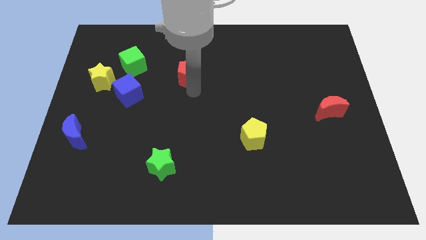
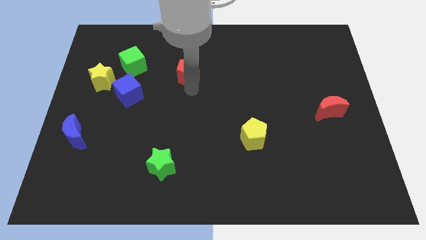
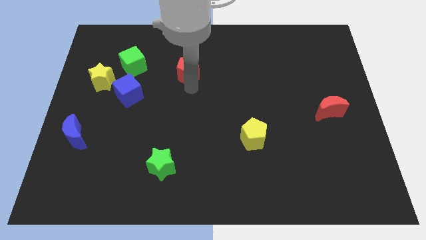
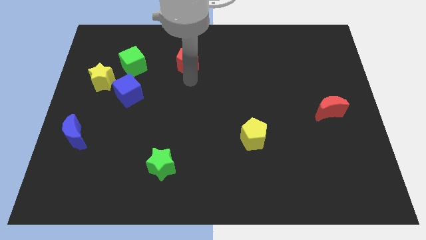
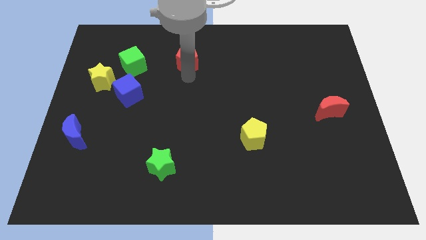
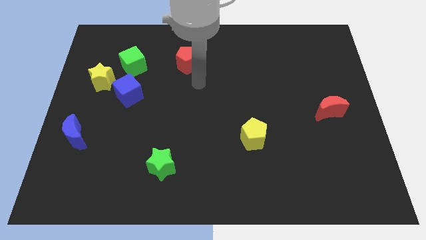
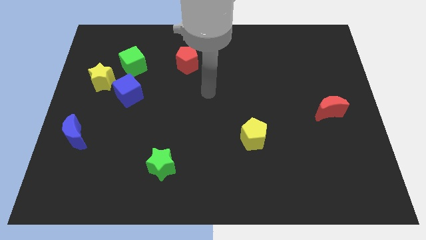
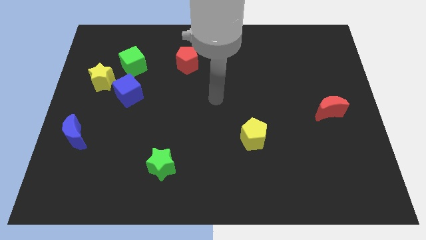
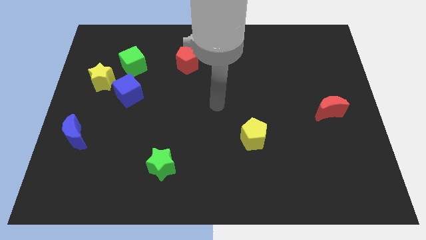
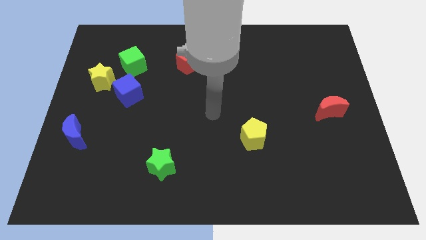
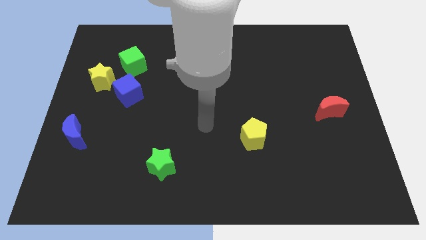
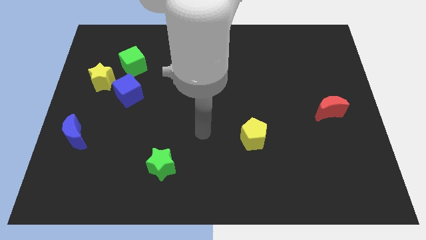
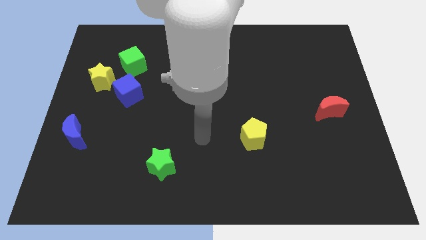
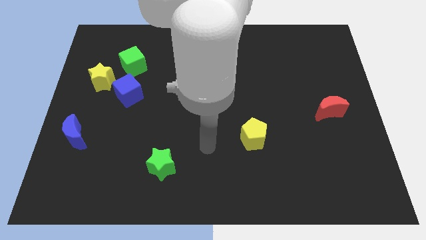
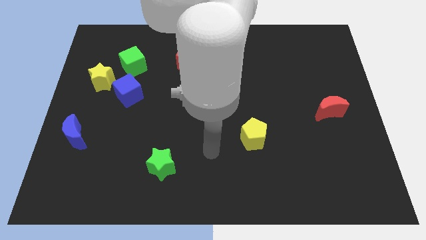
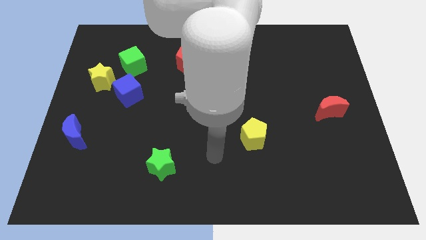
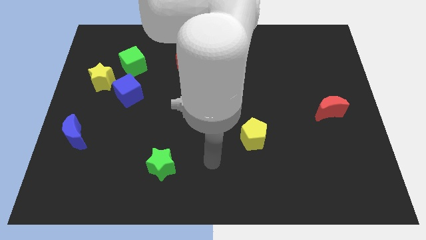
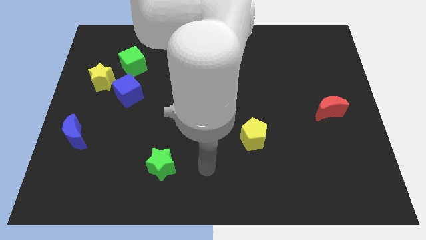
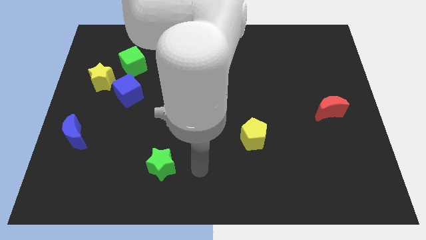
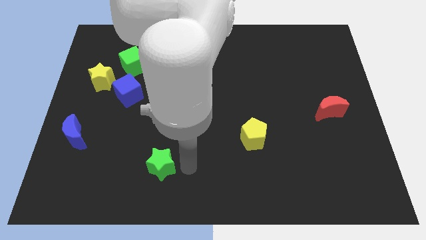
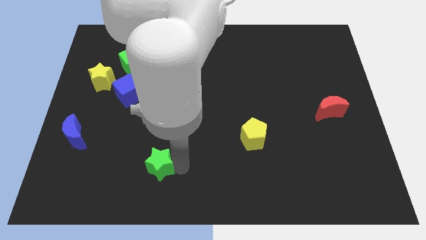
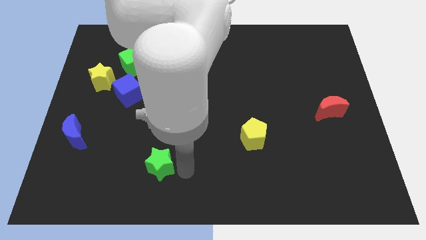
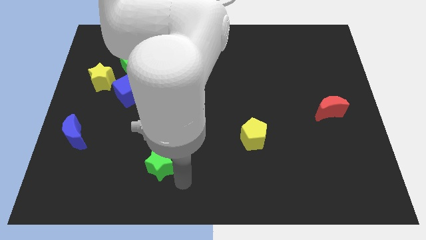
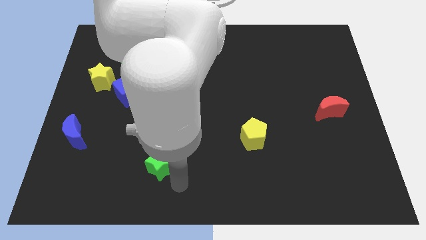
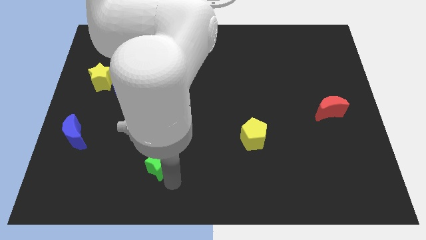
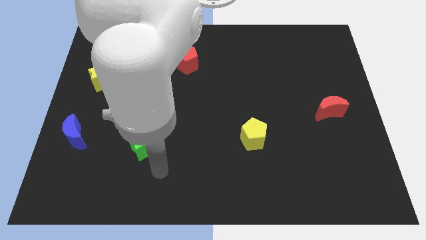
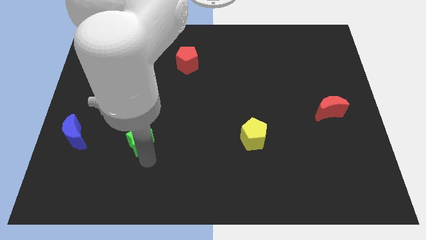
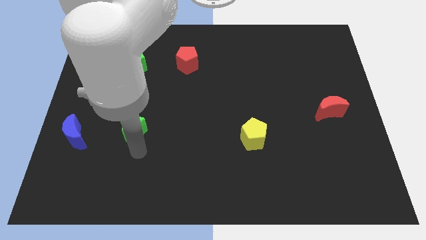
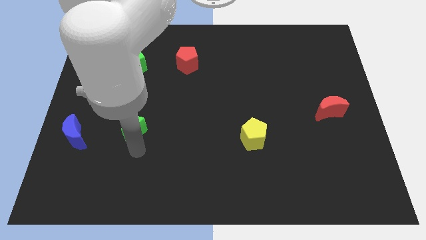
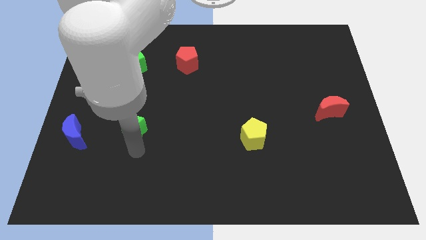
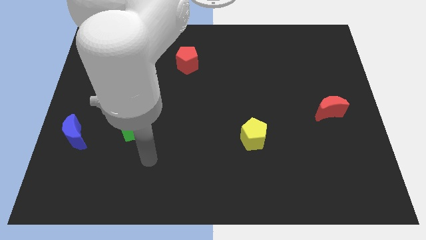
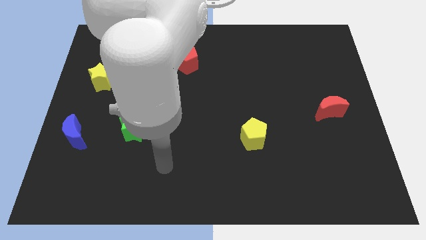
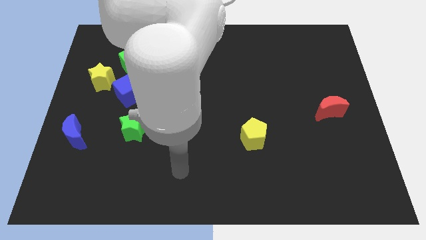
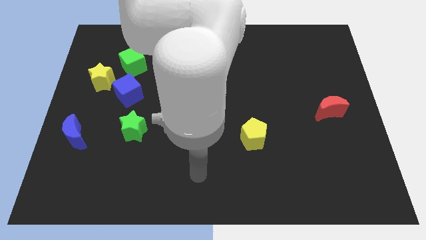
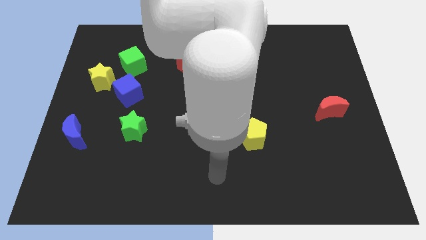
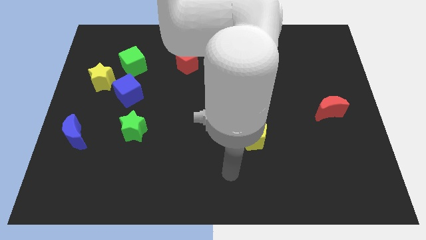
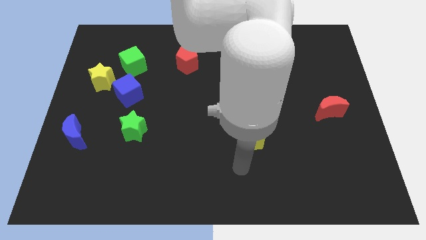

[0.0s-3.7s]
move the green star below the blue cube

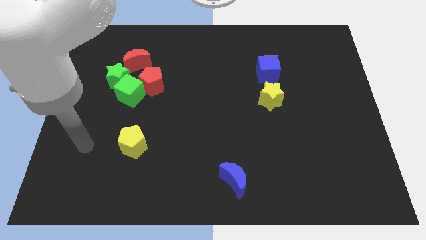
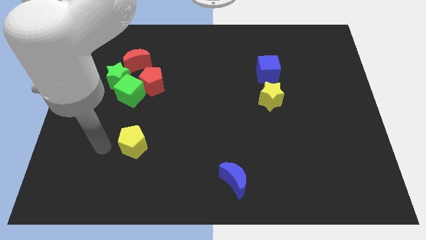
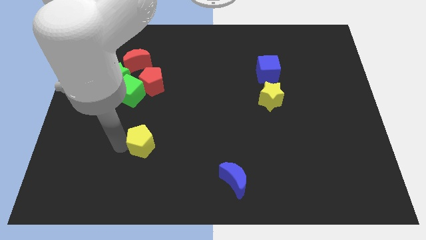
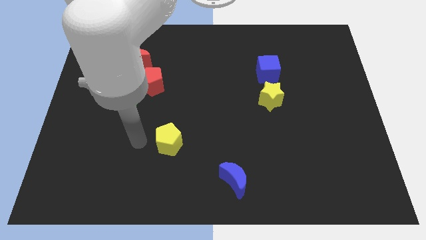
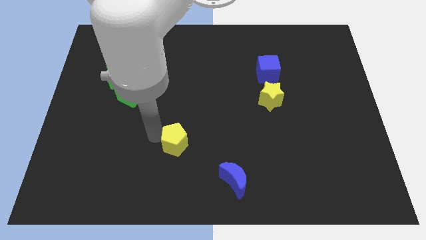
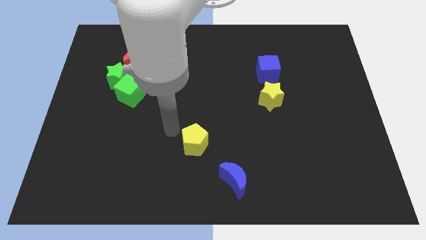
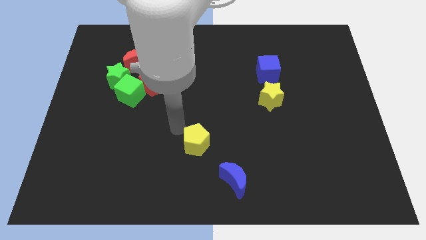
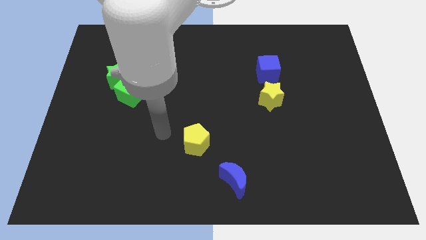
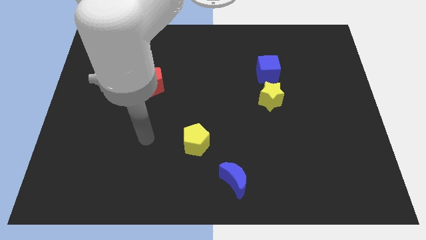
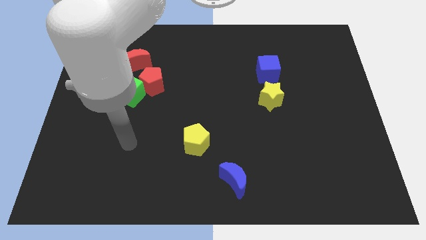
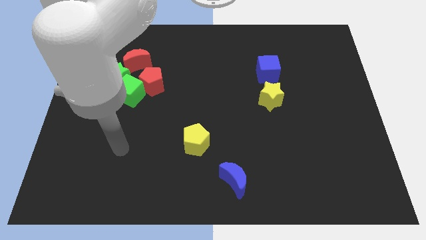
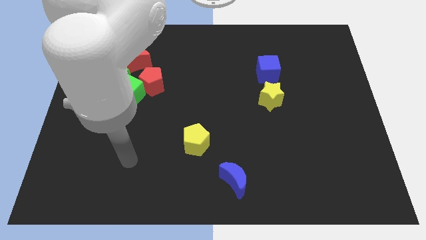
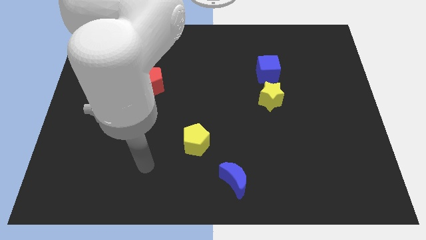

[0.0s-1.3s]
place yellow pentagon near to blue crescent

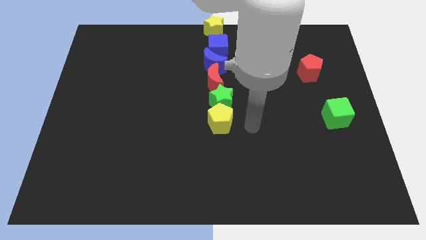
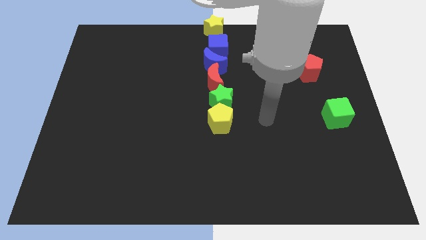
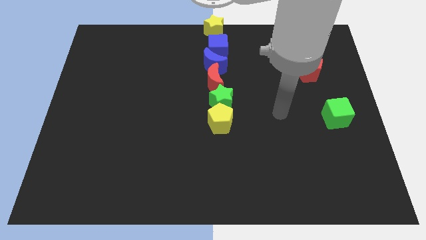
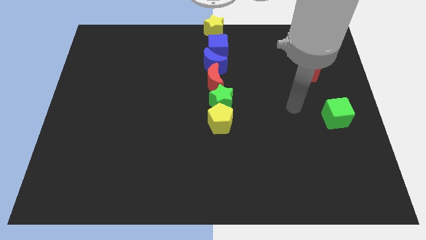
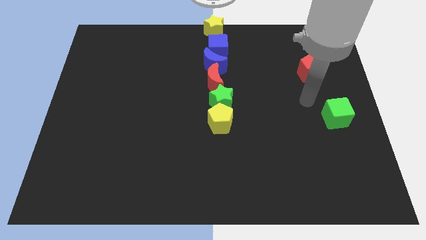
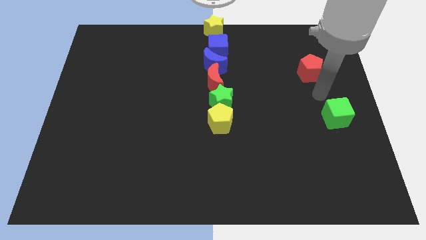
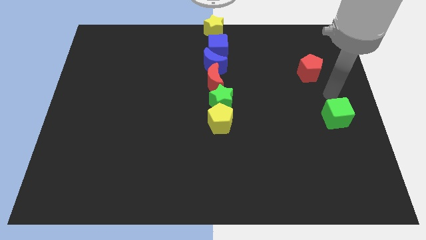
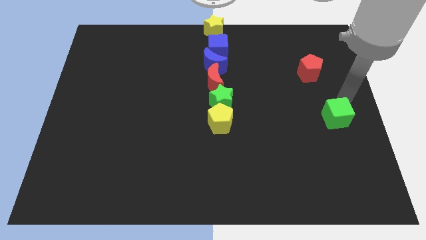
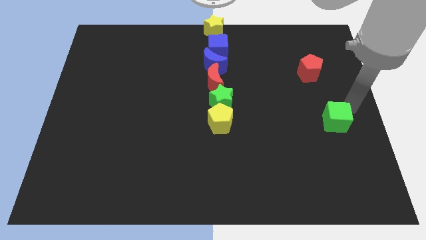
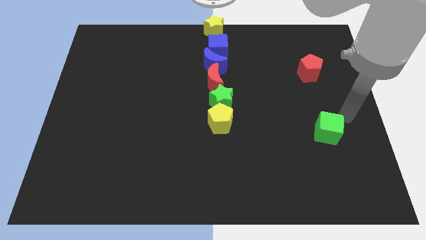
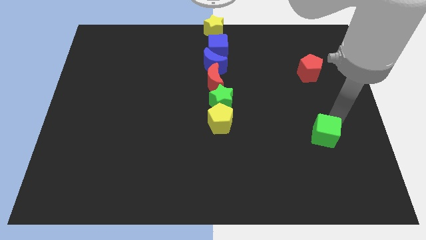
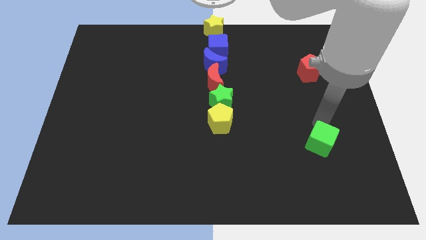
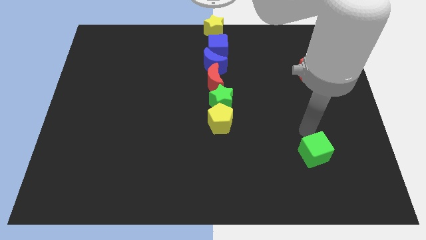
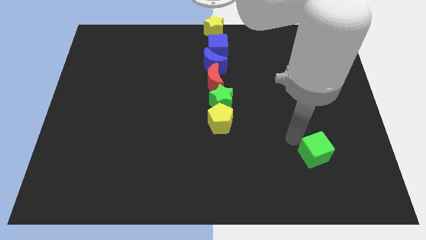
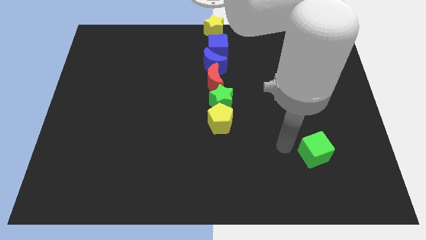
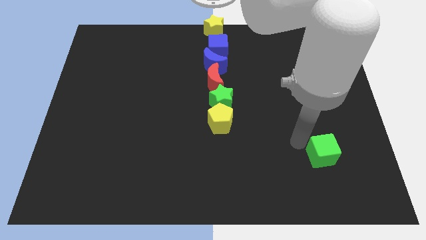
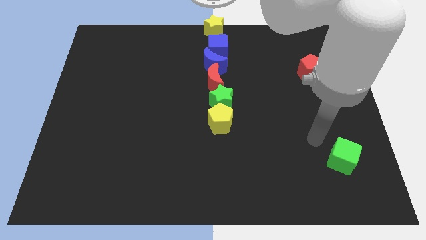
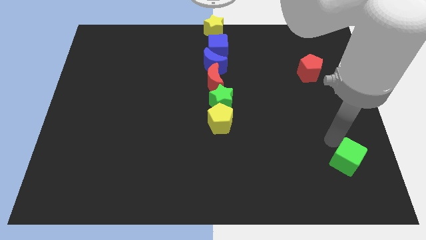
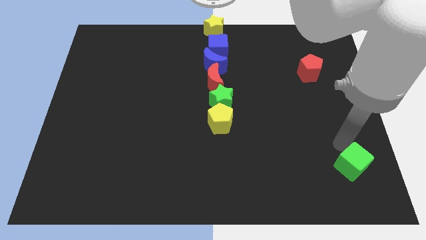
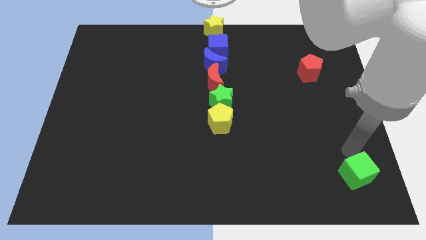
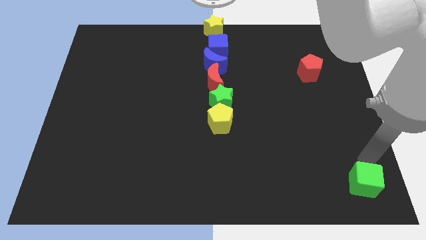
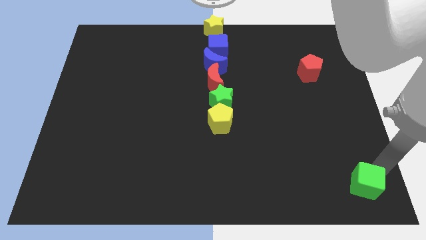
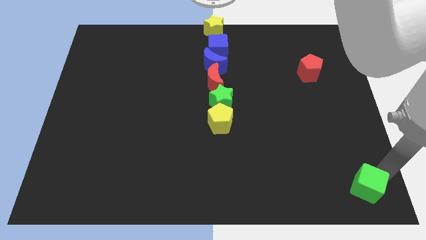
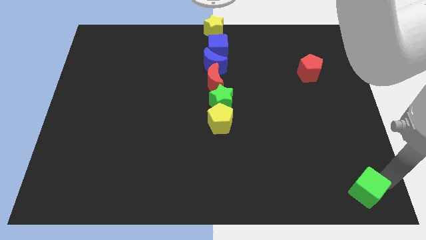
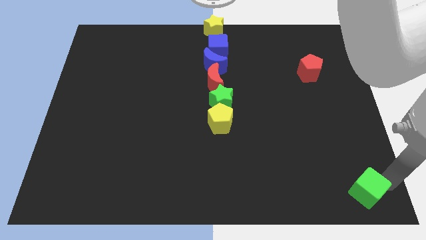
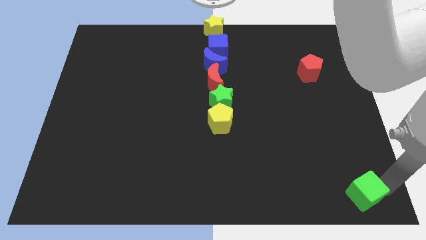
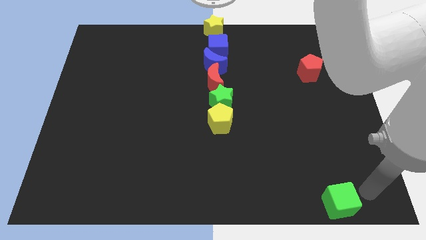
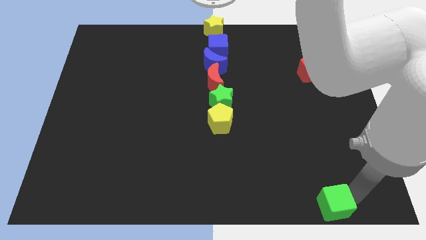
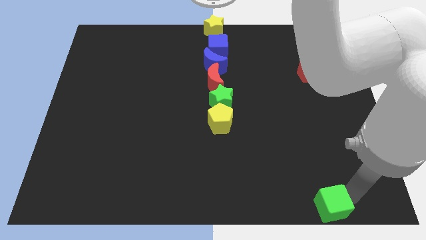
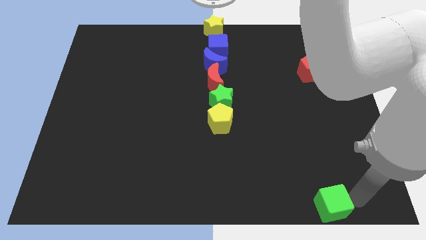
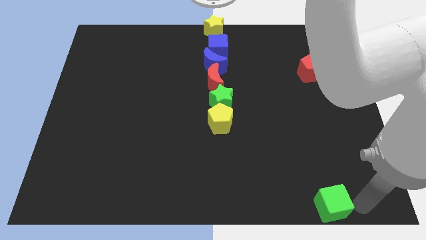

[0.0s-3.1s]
push the green cube towards the bottom side of the board

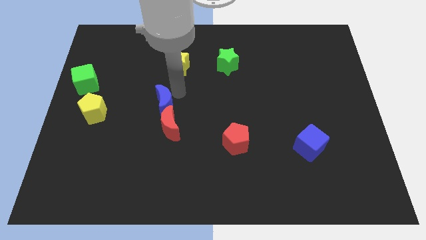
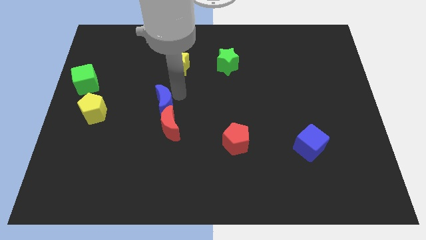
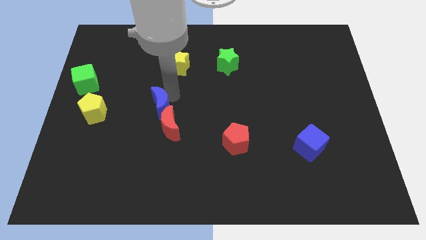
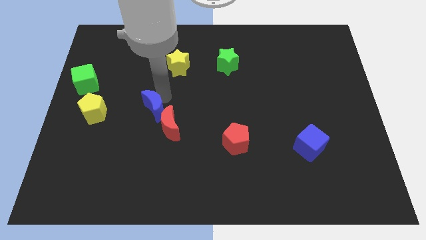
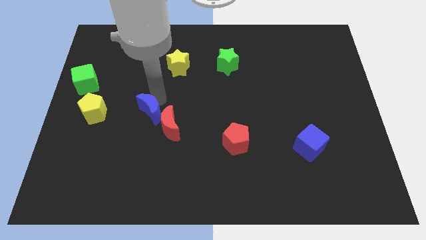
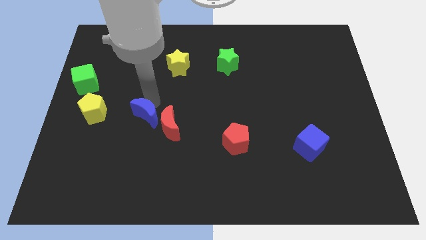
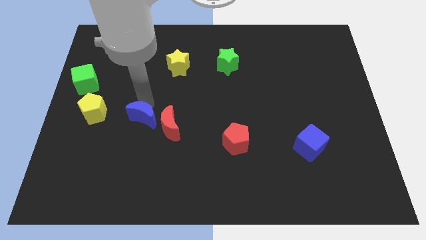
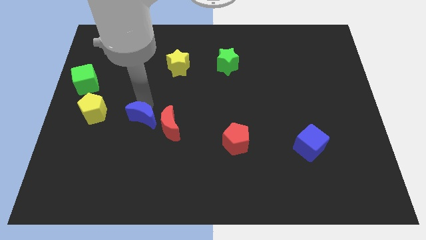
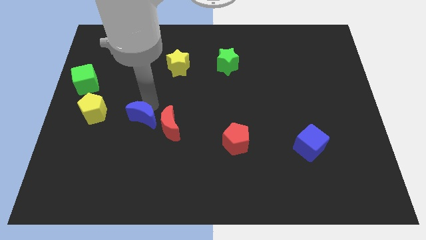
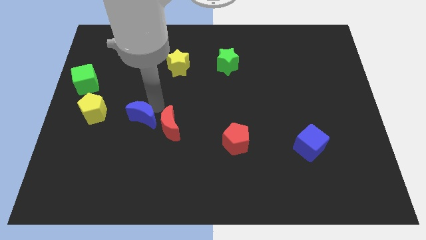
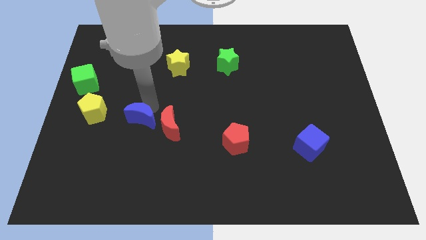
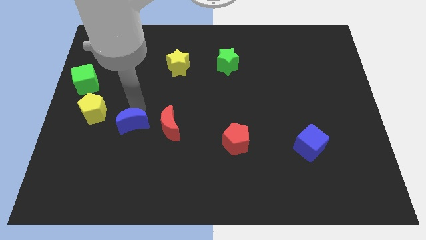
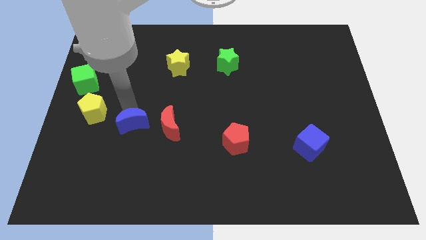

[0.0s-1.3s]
put blue crescent in between yellow pentagon and red moon
